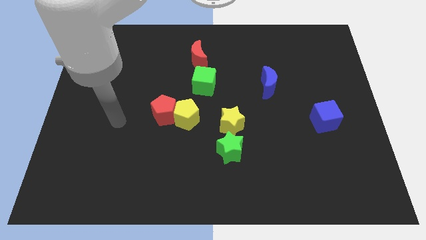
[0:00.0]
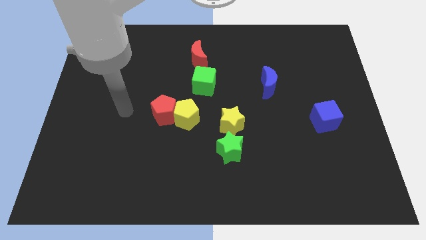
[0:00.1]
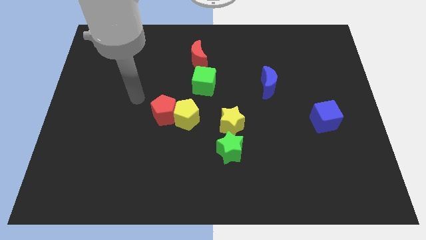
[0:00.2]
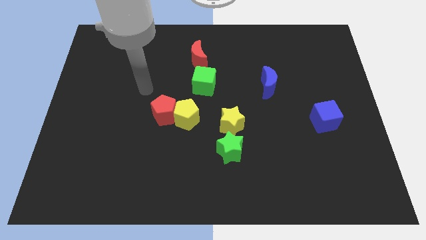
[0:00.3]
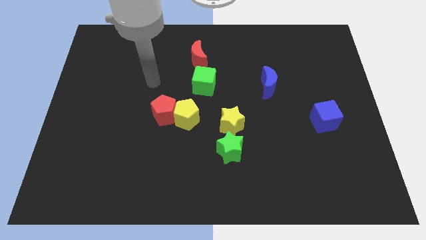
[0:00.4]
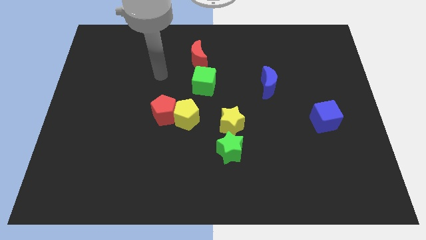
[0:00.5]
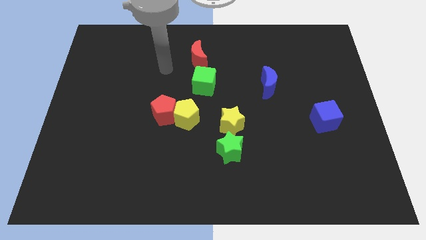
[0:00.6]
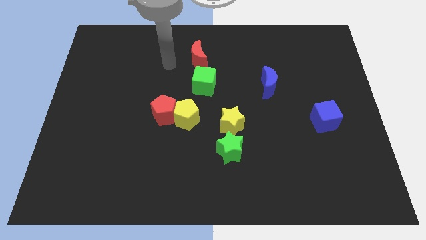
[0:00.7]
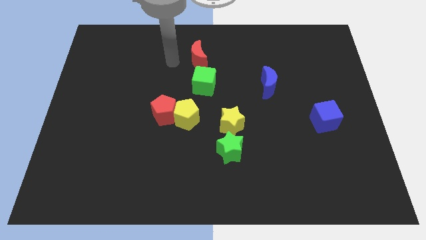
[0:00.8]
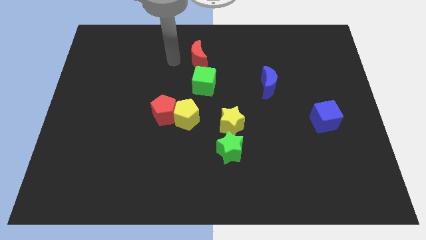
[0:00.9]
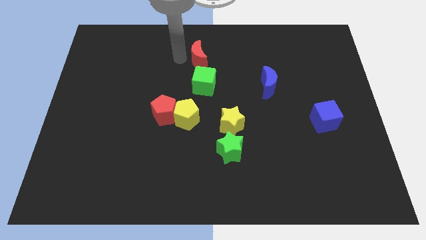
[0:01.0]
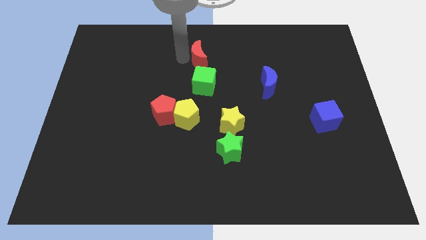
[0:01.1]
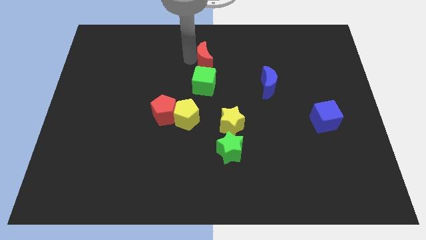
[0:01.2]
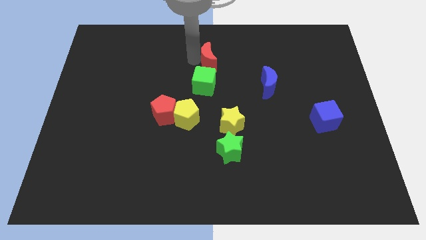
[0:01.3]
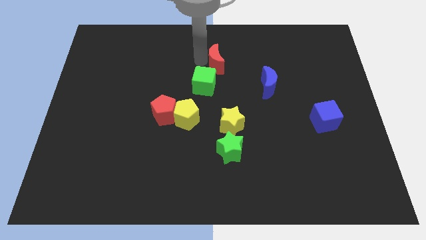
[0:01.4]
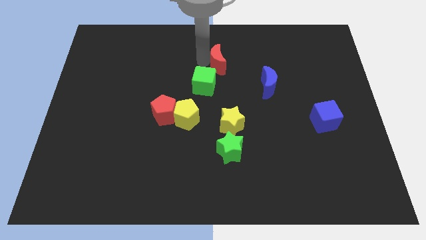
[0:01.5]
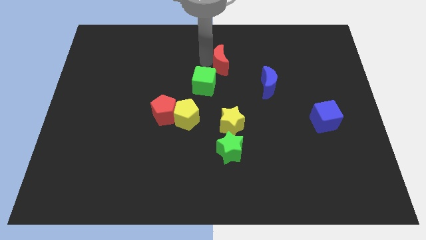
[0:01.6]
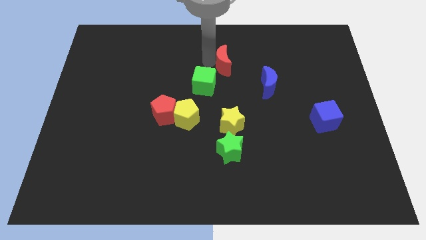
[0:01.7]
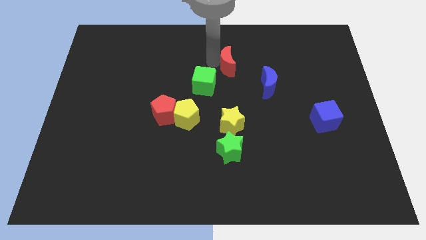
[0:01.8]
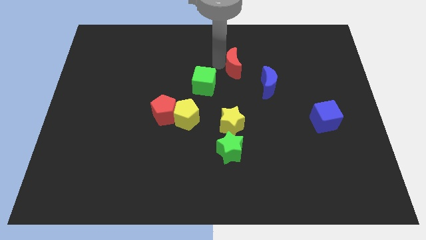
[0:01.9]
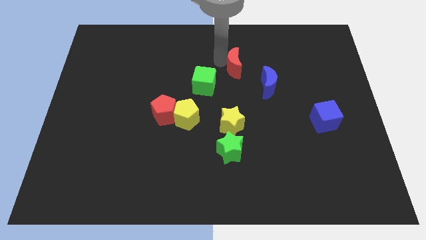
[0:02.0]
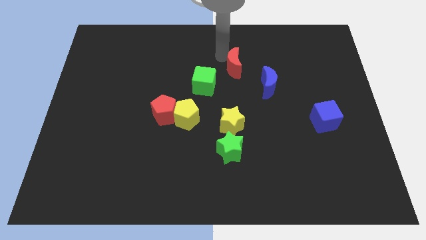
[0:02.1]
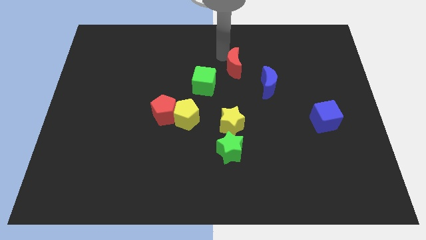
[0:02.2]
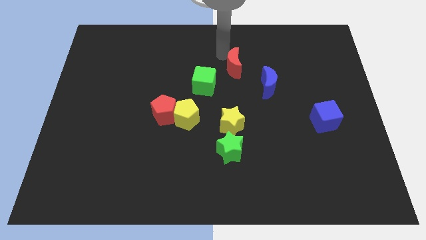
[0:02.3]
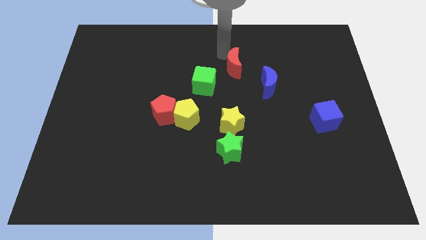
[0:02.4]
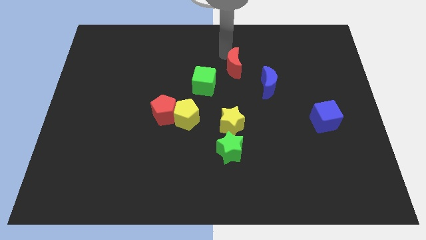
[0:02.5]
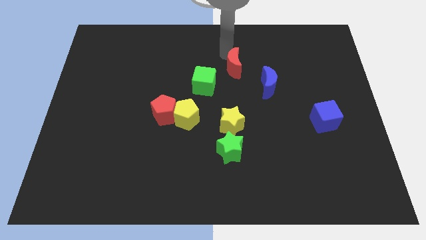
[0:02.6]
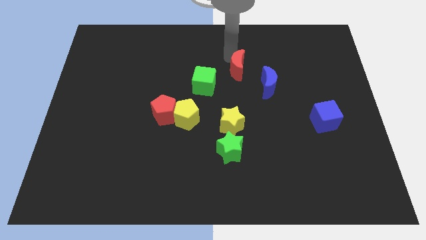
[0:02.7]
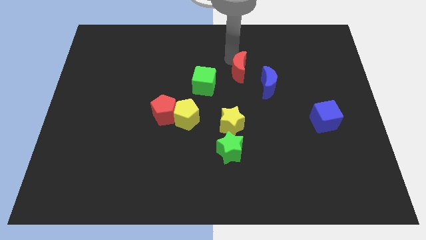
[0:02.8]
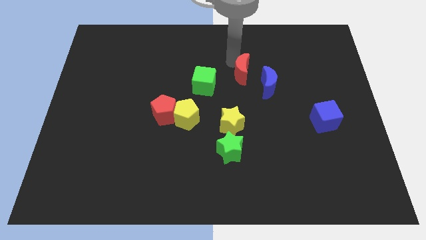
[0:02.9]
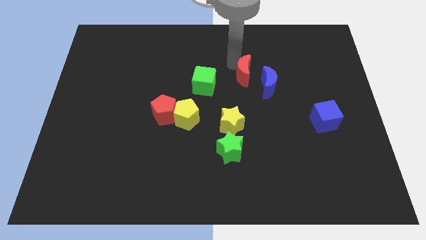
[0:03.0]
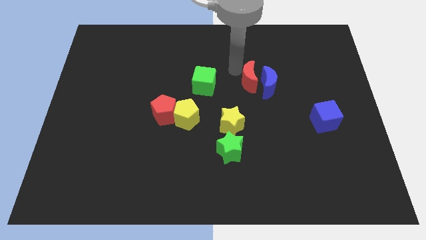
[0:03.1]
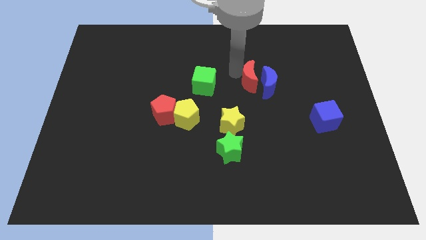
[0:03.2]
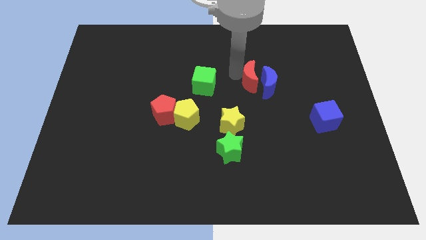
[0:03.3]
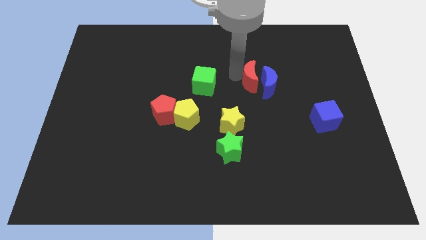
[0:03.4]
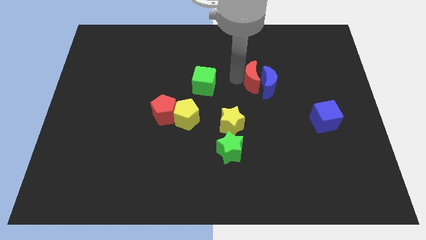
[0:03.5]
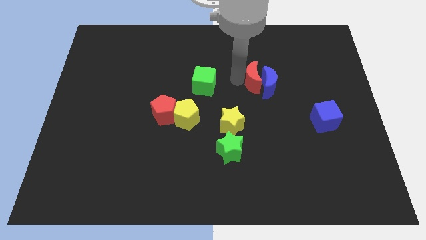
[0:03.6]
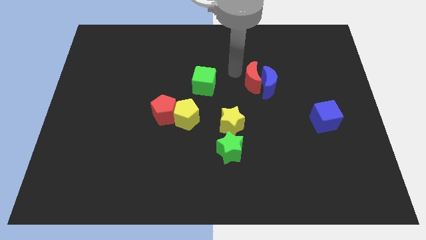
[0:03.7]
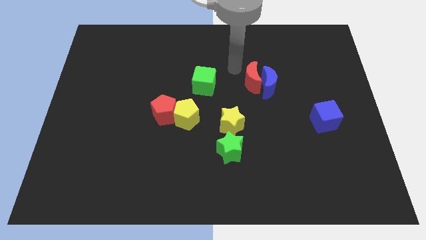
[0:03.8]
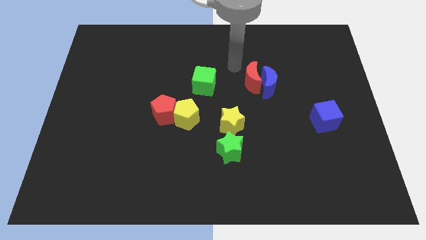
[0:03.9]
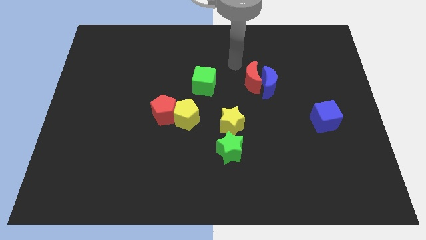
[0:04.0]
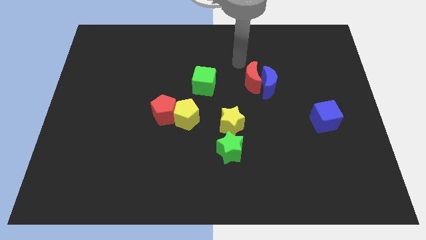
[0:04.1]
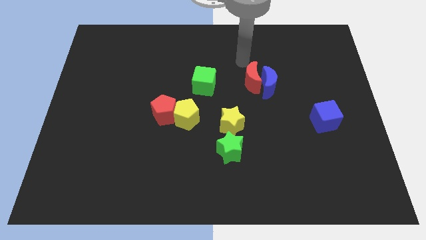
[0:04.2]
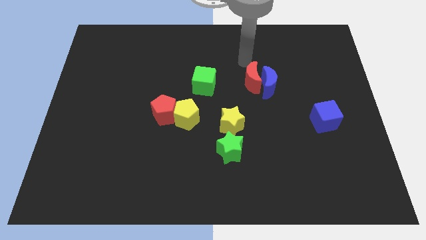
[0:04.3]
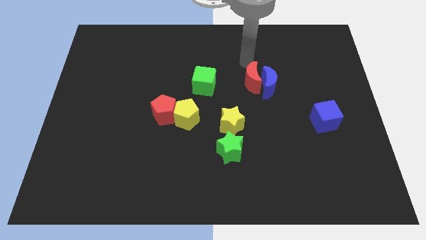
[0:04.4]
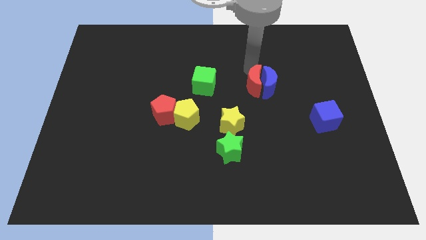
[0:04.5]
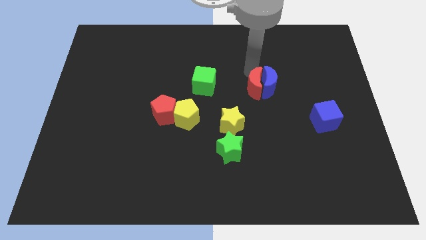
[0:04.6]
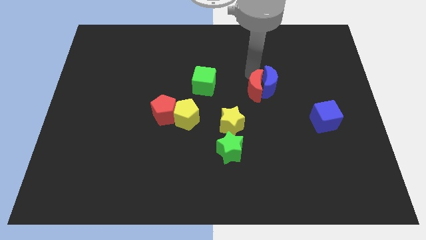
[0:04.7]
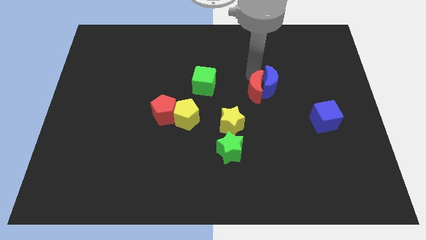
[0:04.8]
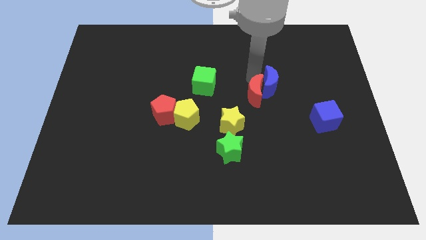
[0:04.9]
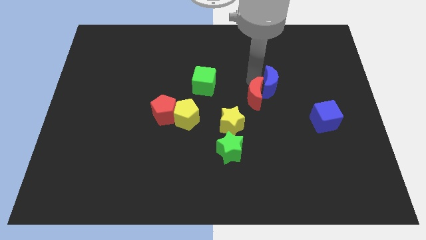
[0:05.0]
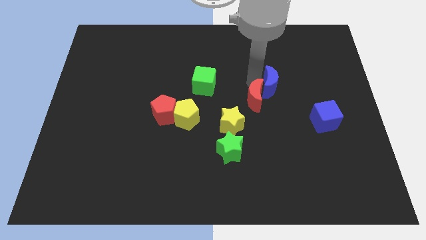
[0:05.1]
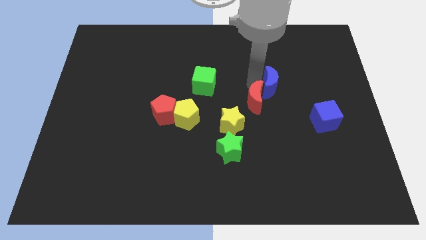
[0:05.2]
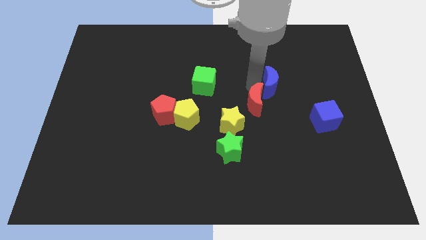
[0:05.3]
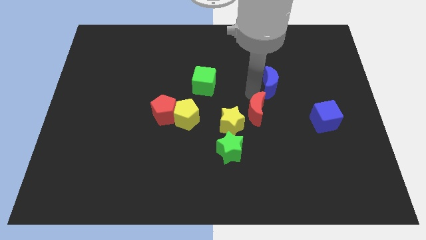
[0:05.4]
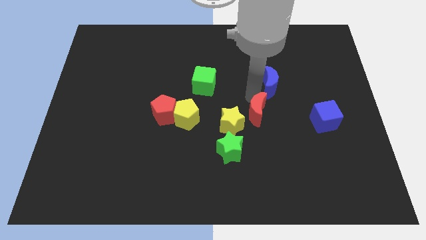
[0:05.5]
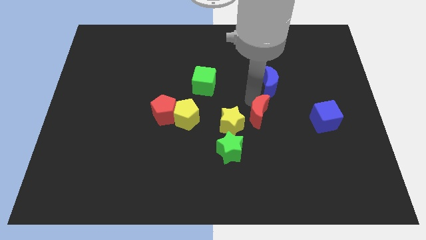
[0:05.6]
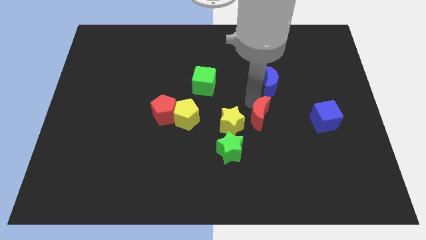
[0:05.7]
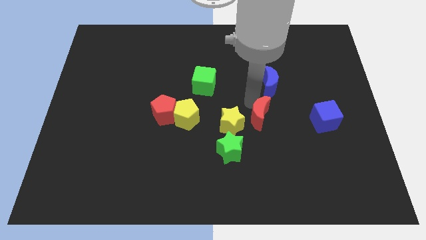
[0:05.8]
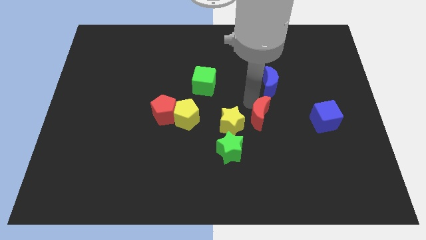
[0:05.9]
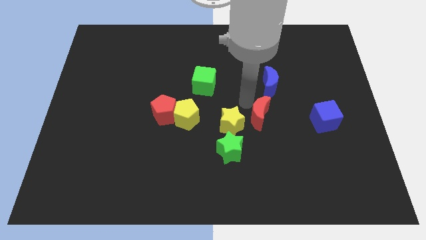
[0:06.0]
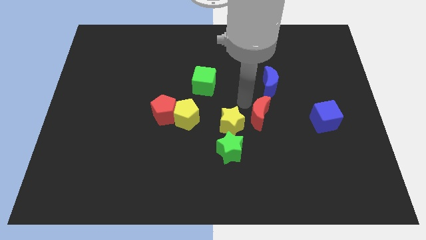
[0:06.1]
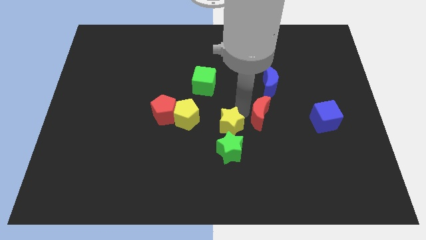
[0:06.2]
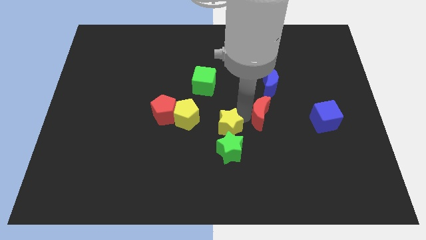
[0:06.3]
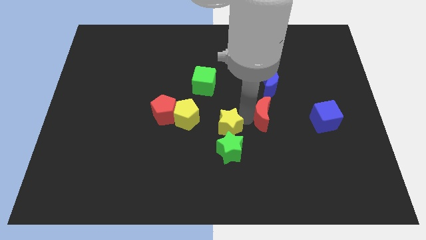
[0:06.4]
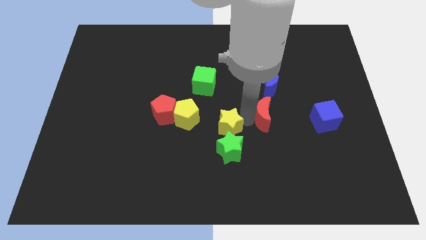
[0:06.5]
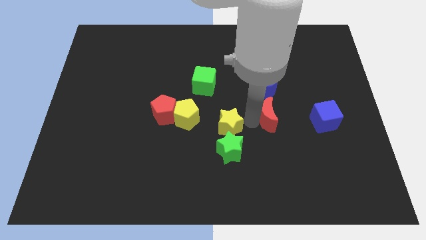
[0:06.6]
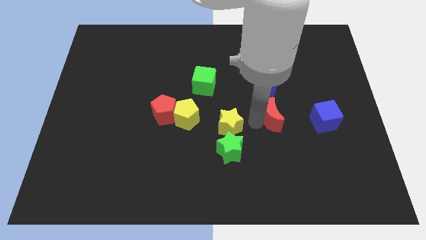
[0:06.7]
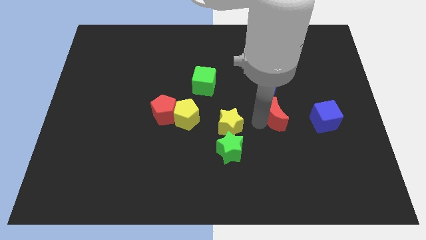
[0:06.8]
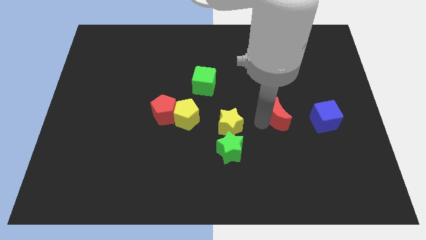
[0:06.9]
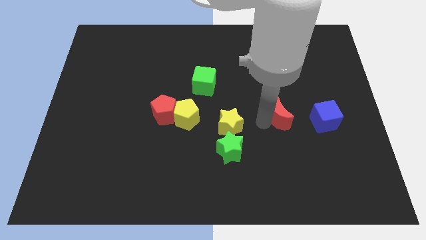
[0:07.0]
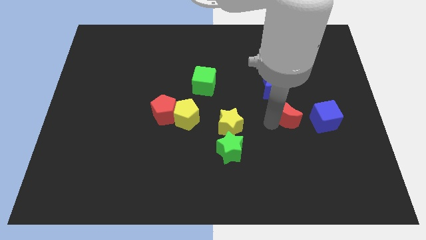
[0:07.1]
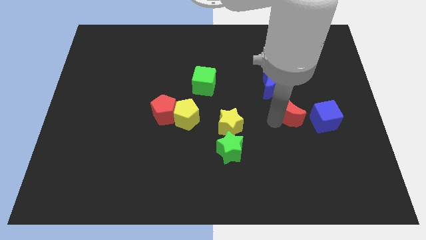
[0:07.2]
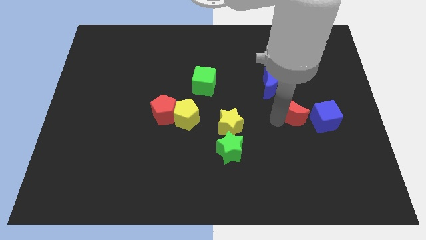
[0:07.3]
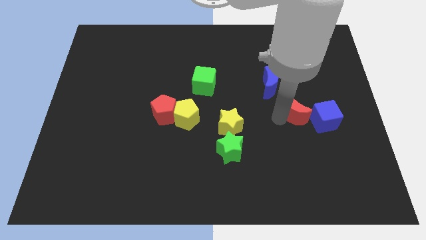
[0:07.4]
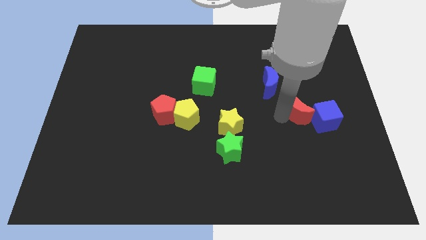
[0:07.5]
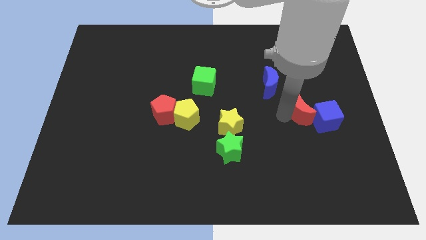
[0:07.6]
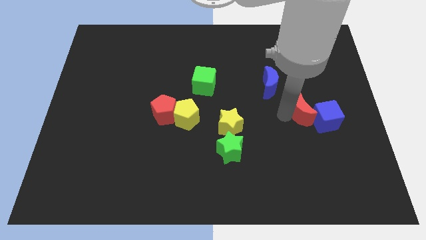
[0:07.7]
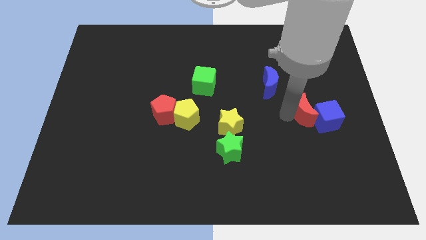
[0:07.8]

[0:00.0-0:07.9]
slide the red moon next to the blue cube

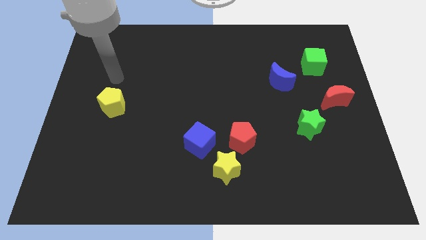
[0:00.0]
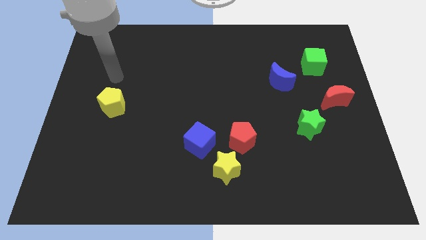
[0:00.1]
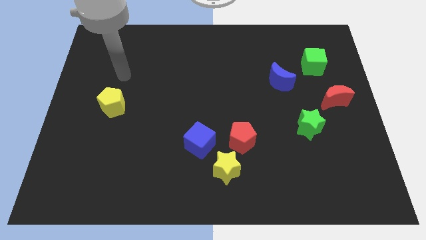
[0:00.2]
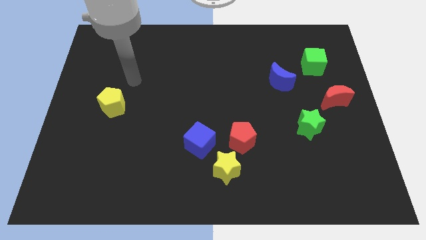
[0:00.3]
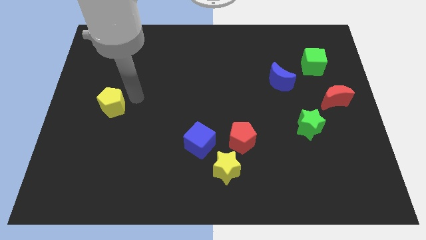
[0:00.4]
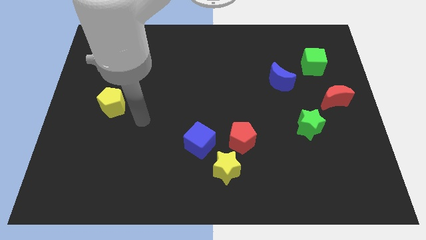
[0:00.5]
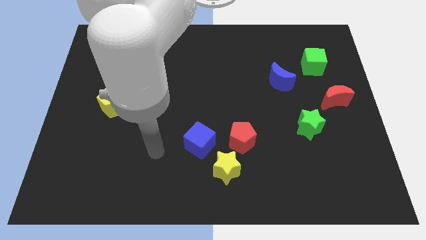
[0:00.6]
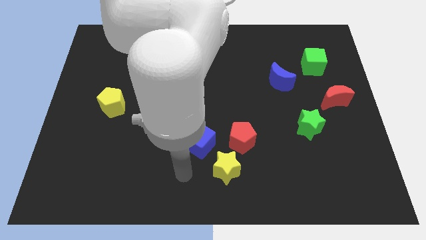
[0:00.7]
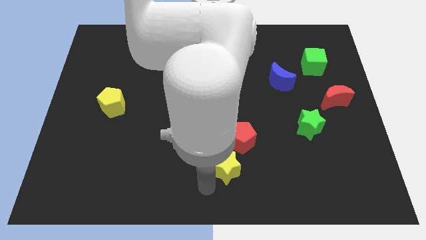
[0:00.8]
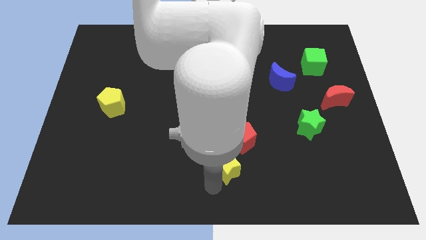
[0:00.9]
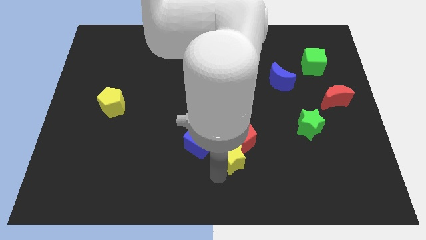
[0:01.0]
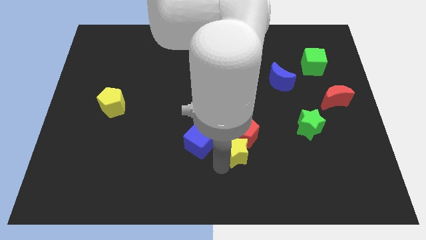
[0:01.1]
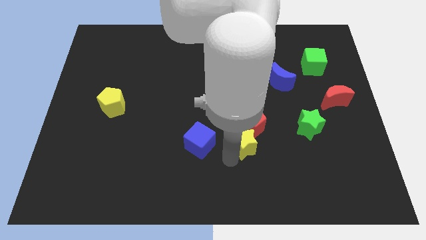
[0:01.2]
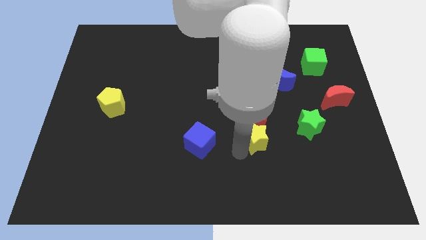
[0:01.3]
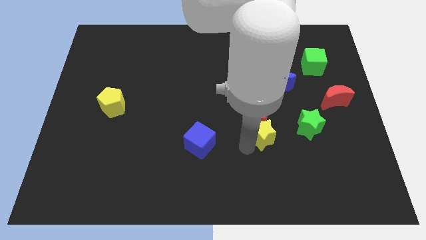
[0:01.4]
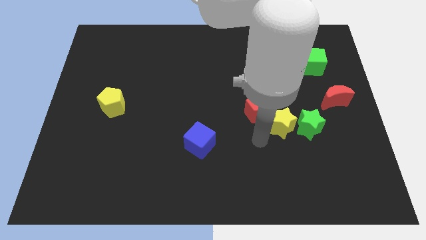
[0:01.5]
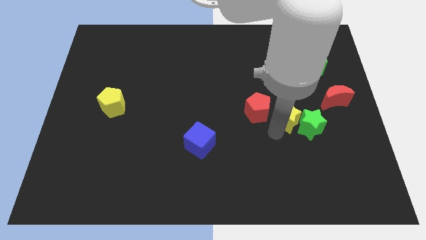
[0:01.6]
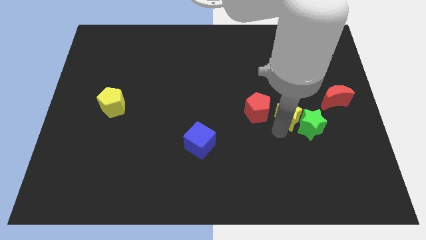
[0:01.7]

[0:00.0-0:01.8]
move the yellow star towards the green star
